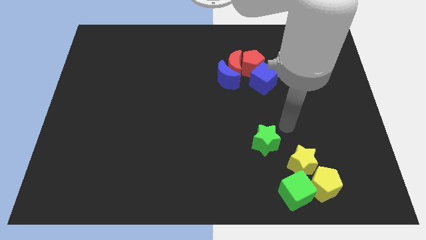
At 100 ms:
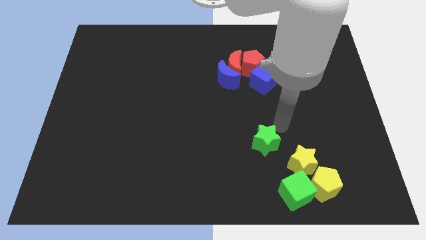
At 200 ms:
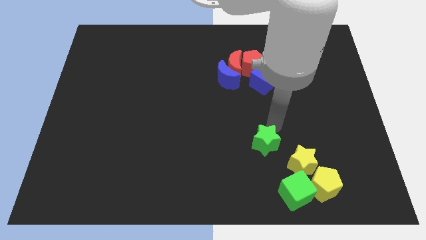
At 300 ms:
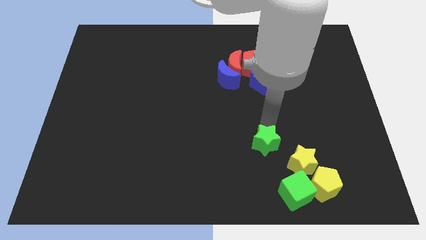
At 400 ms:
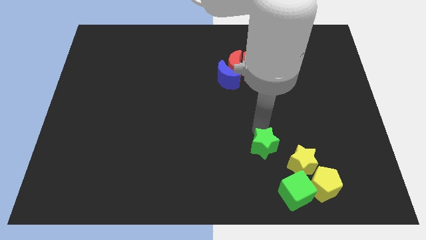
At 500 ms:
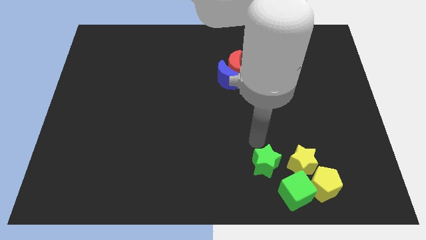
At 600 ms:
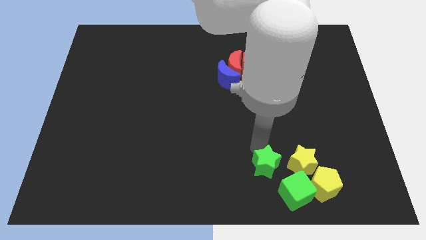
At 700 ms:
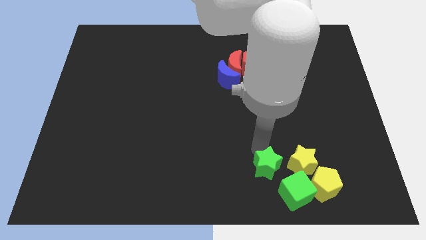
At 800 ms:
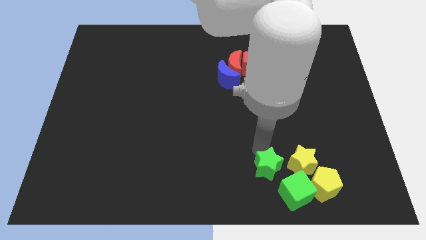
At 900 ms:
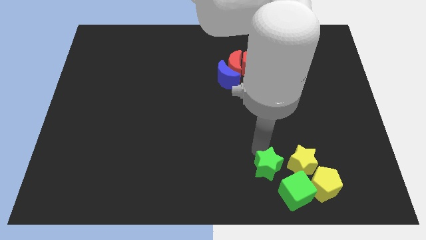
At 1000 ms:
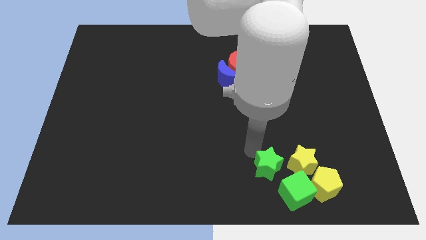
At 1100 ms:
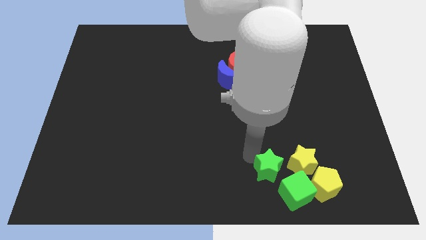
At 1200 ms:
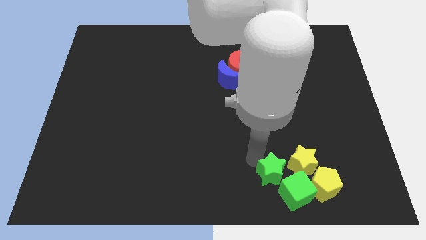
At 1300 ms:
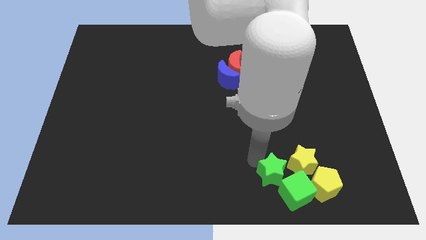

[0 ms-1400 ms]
push the green star towards green cube

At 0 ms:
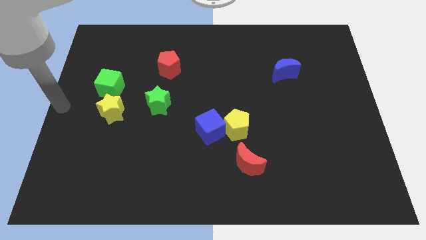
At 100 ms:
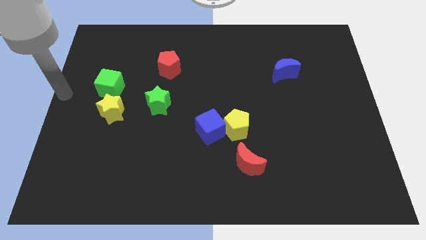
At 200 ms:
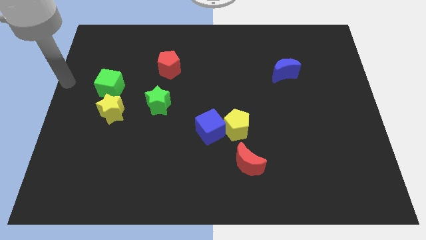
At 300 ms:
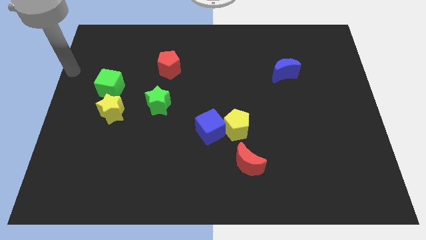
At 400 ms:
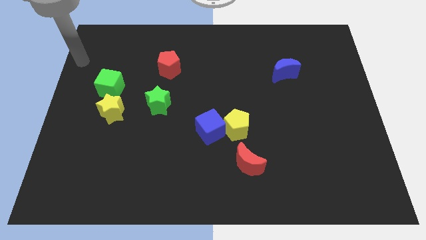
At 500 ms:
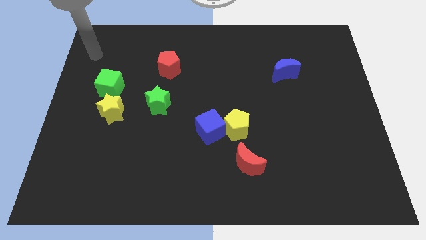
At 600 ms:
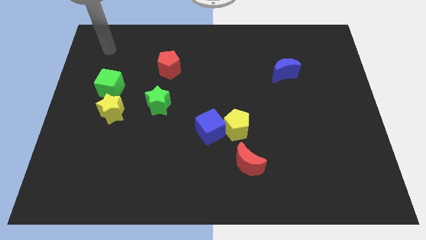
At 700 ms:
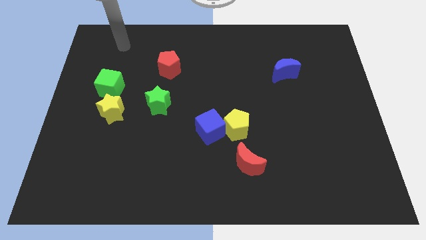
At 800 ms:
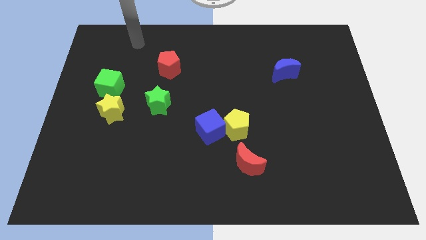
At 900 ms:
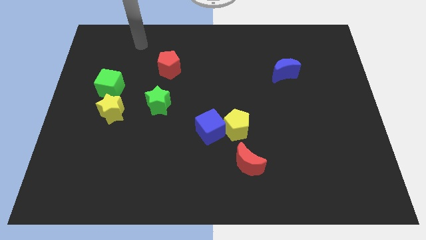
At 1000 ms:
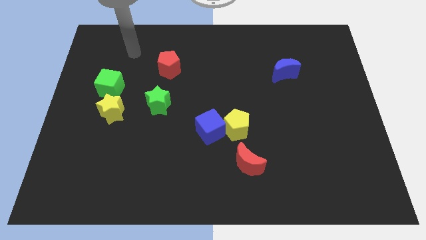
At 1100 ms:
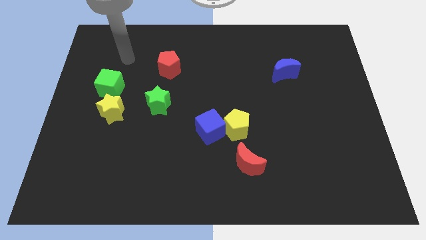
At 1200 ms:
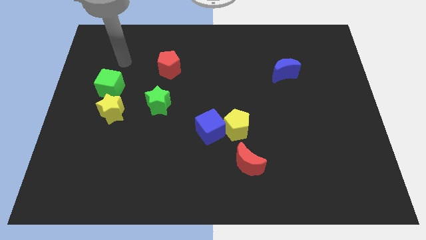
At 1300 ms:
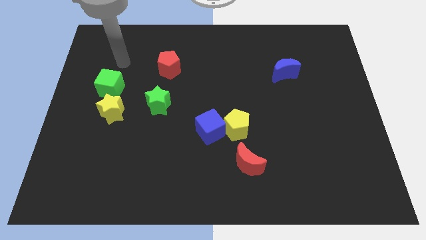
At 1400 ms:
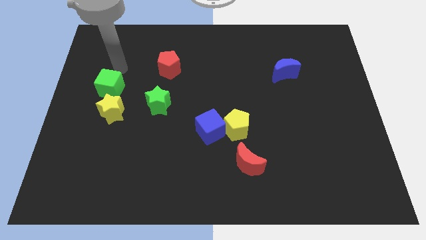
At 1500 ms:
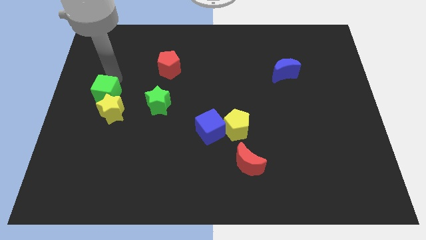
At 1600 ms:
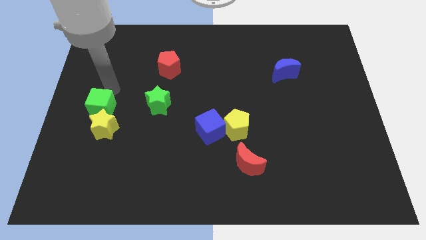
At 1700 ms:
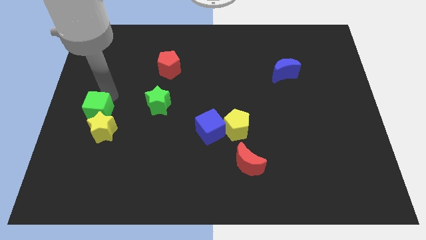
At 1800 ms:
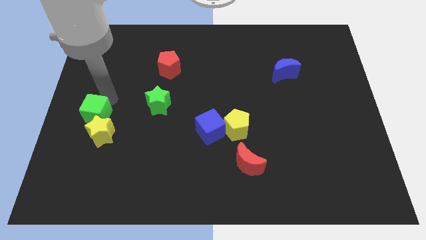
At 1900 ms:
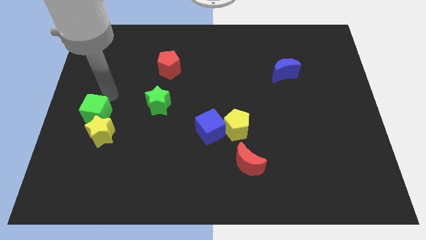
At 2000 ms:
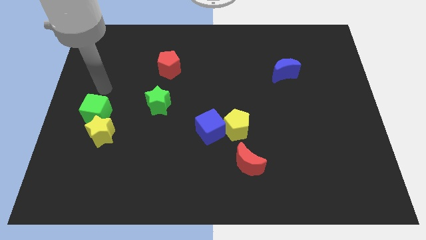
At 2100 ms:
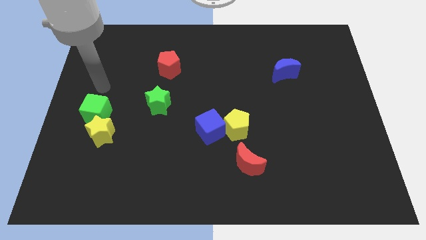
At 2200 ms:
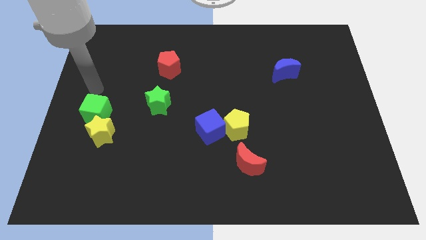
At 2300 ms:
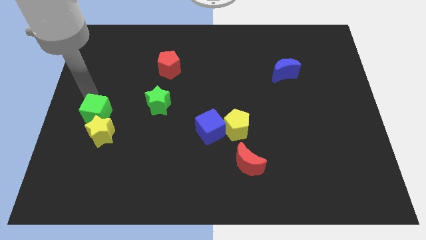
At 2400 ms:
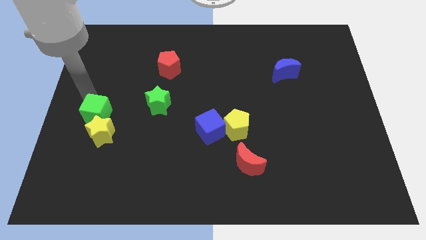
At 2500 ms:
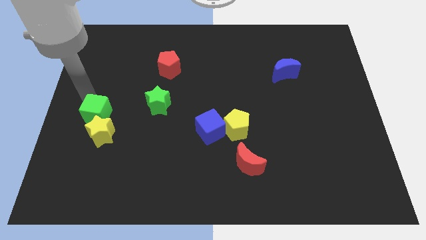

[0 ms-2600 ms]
push the green cube into the yellow star to the left center

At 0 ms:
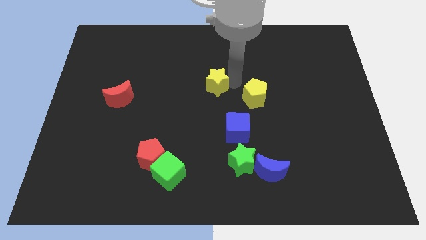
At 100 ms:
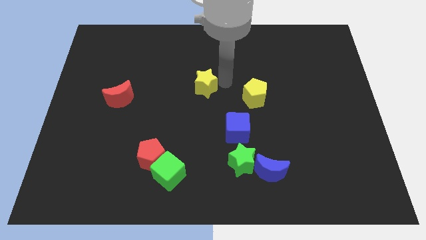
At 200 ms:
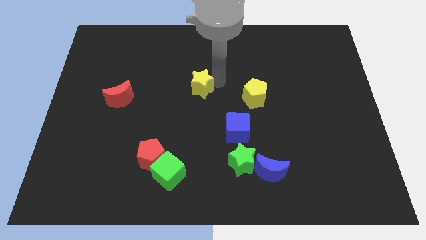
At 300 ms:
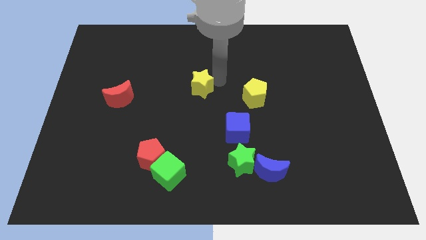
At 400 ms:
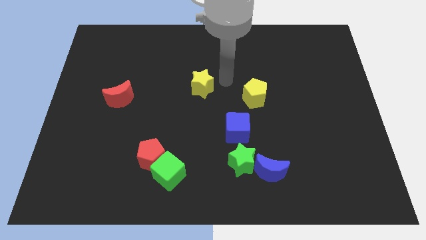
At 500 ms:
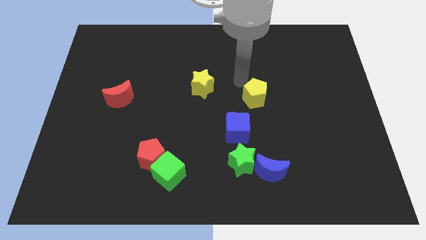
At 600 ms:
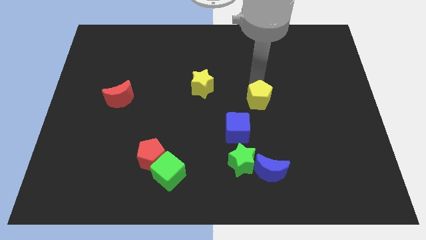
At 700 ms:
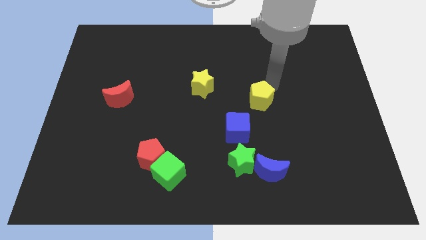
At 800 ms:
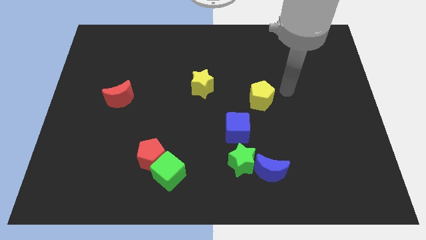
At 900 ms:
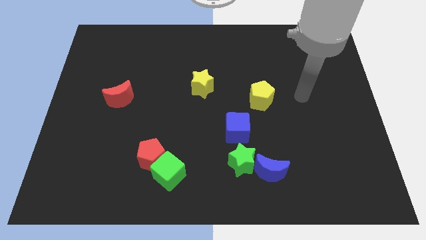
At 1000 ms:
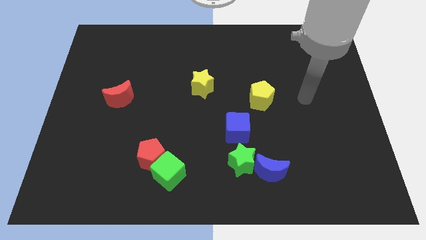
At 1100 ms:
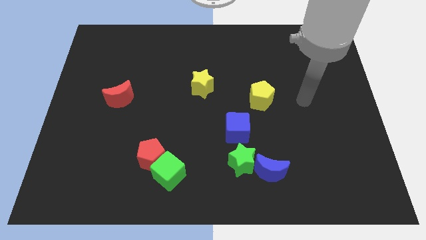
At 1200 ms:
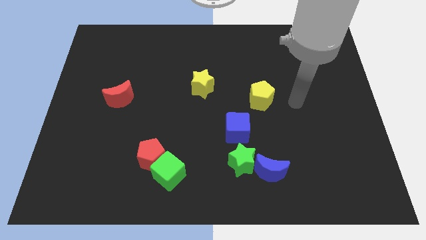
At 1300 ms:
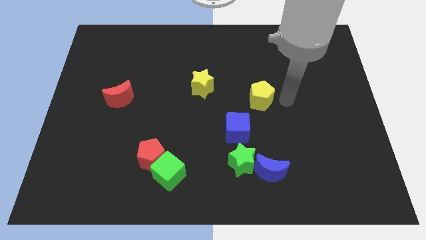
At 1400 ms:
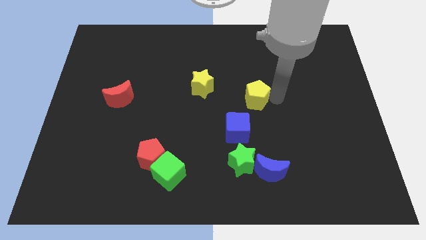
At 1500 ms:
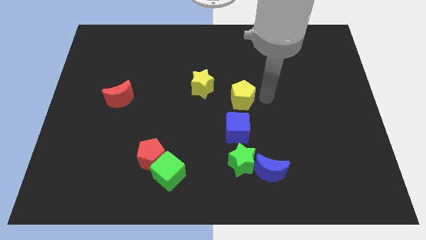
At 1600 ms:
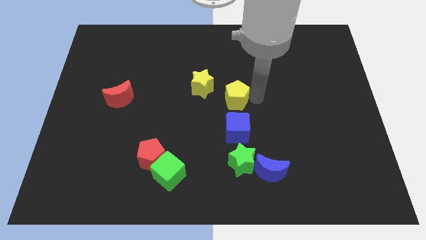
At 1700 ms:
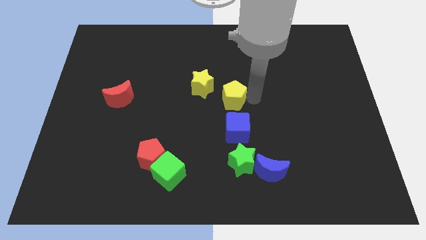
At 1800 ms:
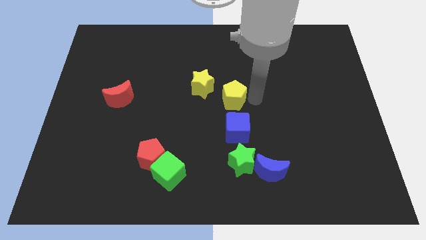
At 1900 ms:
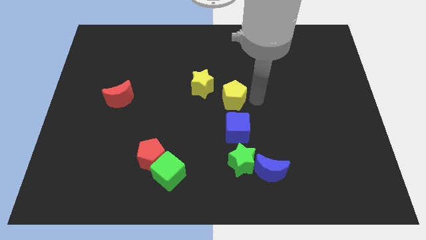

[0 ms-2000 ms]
place yellow pentagon above the blue cube

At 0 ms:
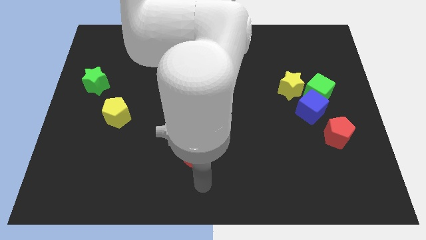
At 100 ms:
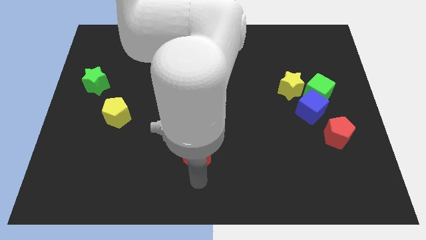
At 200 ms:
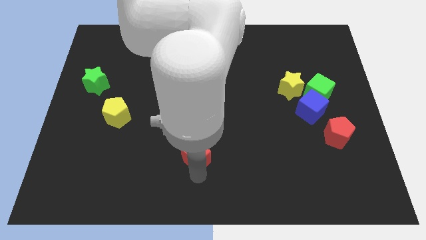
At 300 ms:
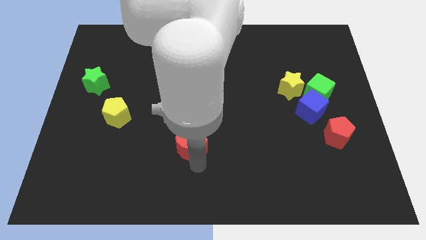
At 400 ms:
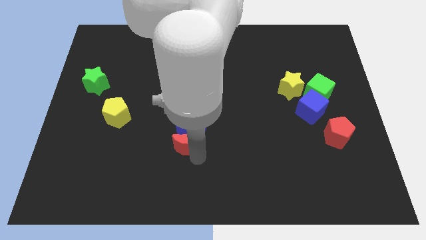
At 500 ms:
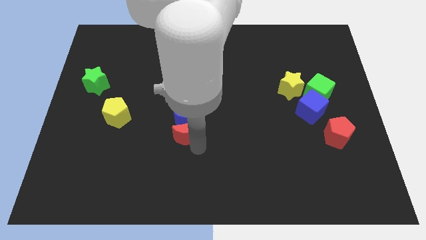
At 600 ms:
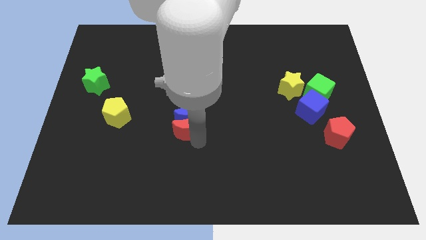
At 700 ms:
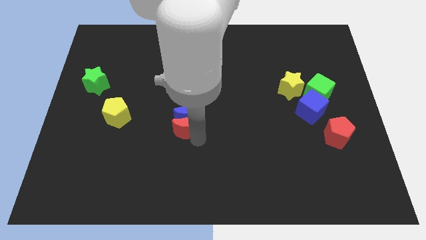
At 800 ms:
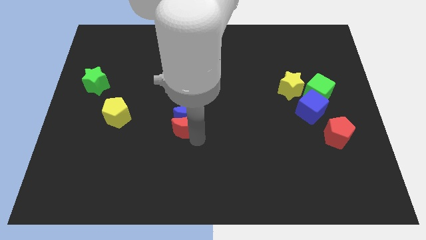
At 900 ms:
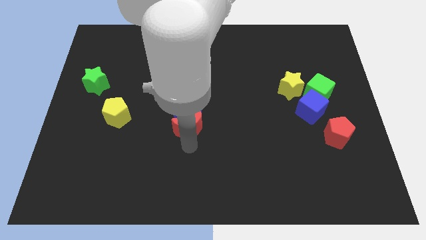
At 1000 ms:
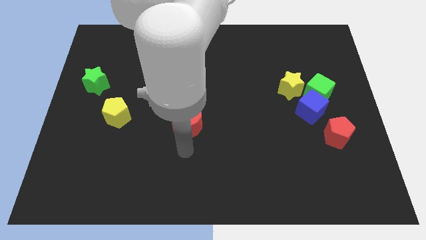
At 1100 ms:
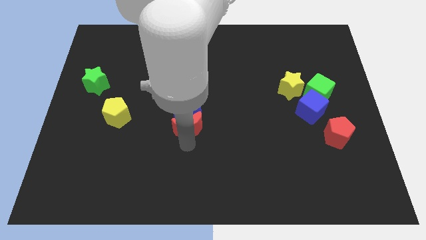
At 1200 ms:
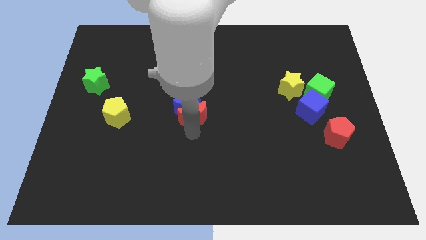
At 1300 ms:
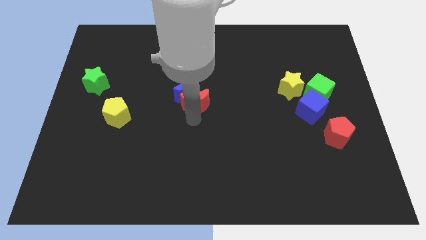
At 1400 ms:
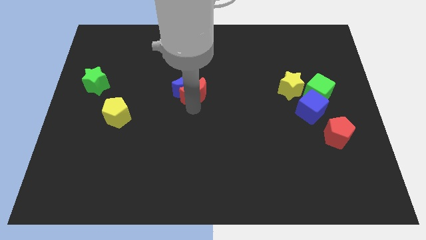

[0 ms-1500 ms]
push the red moon along with the blue moon towards up

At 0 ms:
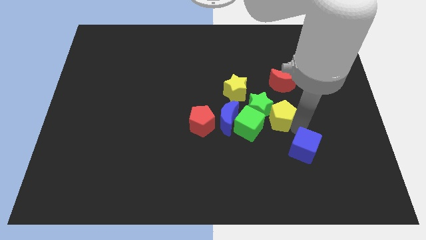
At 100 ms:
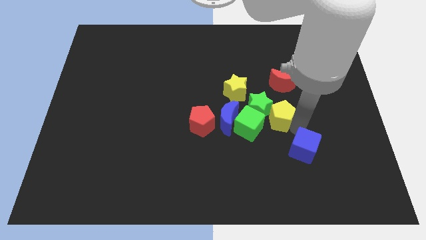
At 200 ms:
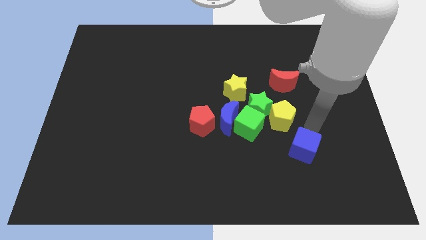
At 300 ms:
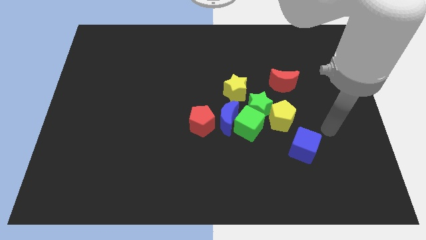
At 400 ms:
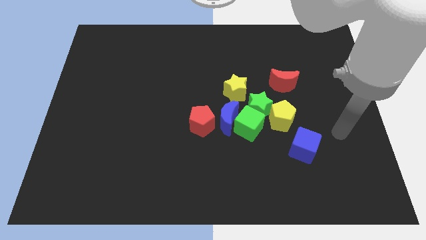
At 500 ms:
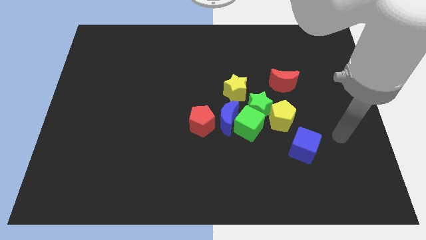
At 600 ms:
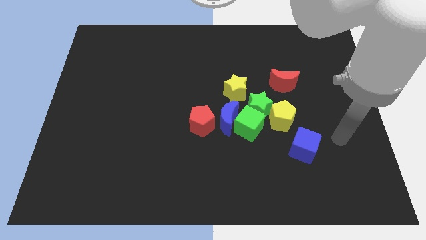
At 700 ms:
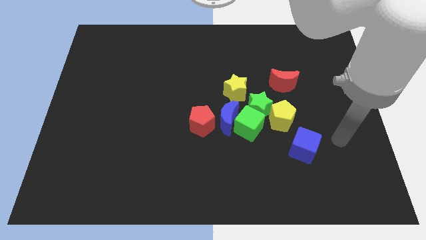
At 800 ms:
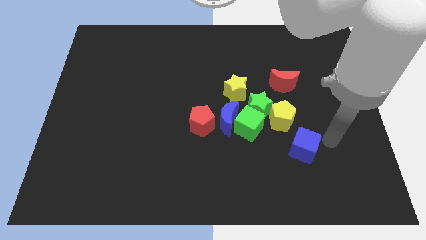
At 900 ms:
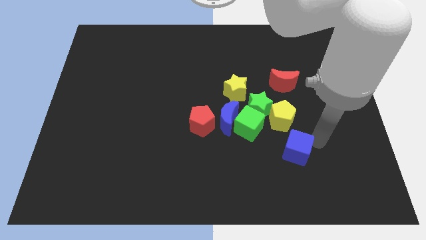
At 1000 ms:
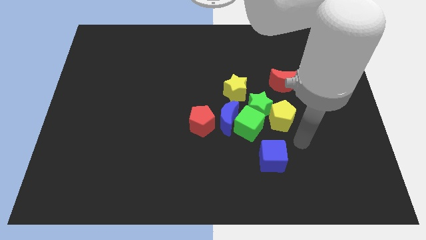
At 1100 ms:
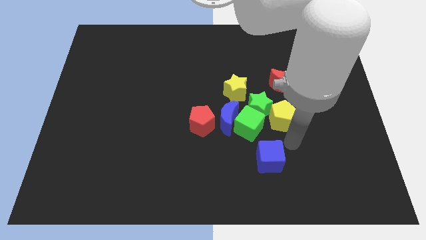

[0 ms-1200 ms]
move your arm to the bottom right side of the yellow pentagon
